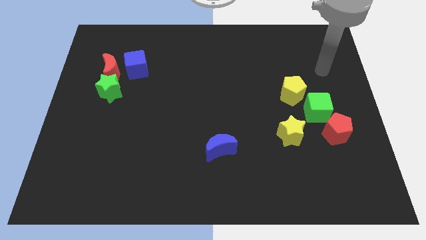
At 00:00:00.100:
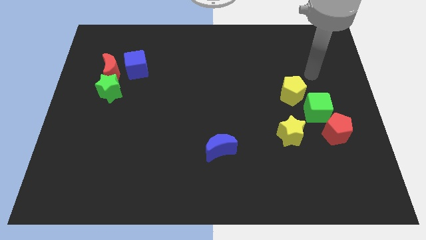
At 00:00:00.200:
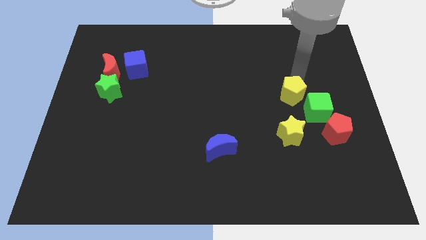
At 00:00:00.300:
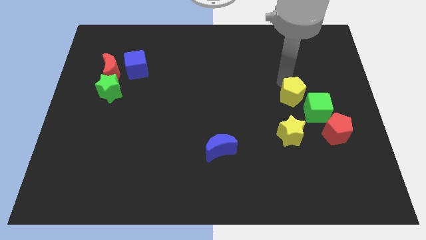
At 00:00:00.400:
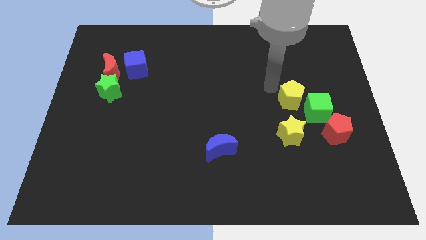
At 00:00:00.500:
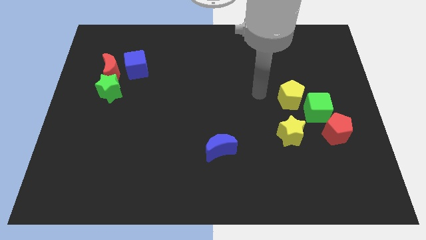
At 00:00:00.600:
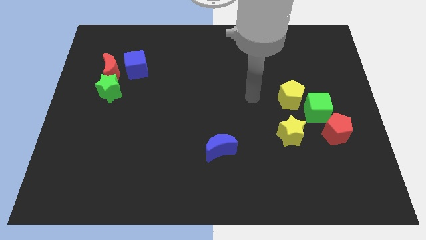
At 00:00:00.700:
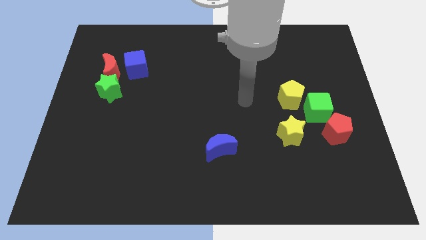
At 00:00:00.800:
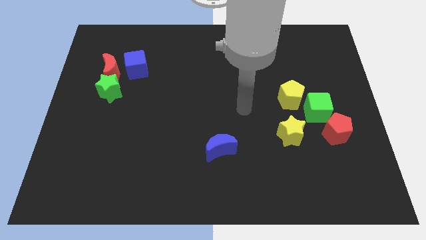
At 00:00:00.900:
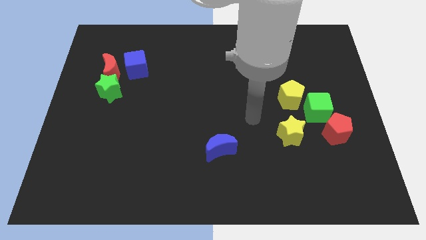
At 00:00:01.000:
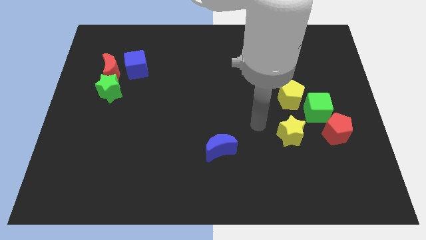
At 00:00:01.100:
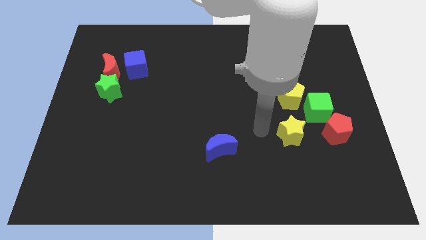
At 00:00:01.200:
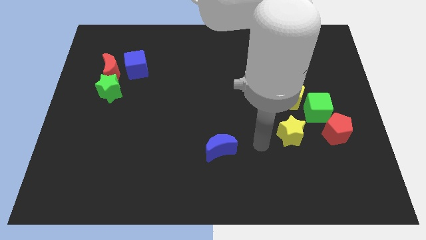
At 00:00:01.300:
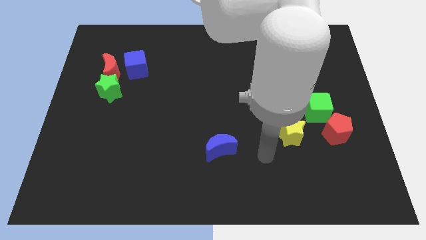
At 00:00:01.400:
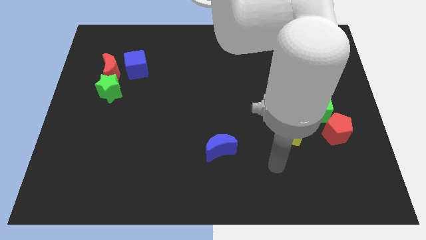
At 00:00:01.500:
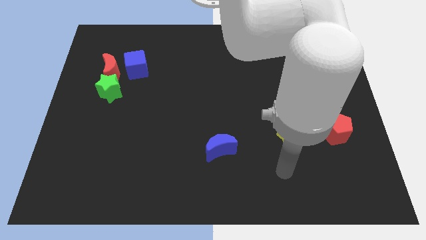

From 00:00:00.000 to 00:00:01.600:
point your arm below the yellow star

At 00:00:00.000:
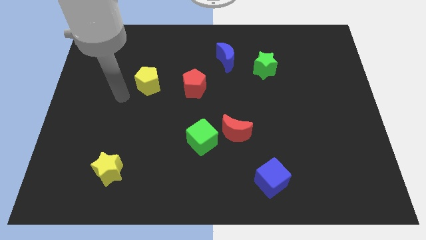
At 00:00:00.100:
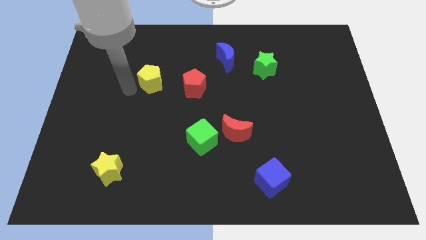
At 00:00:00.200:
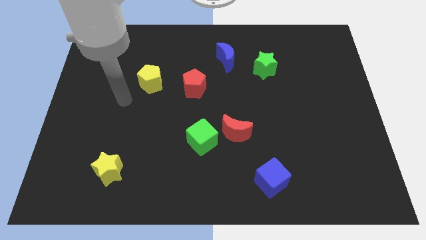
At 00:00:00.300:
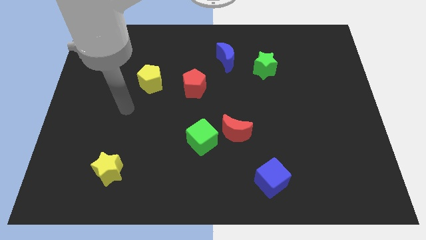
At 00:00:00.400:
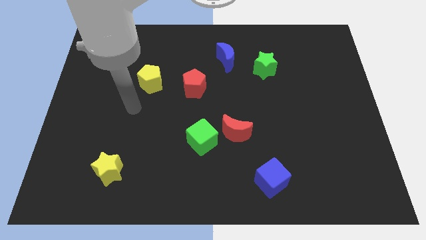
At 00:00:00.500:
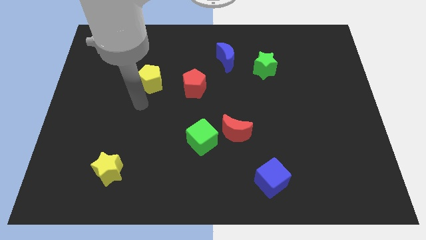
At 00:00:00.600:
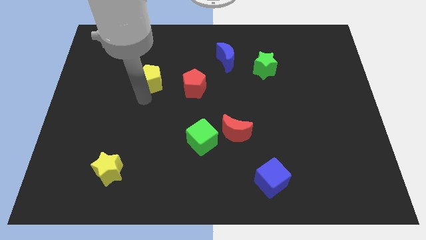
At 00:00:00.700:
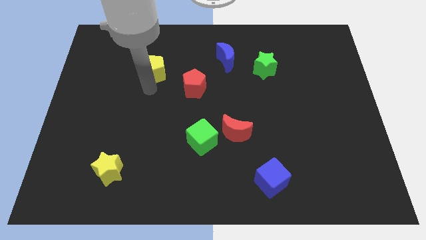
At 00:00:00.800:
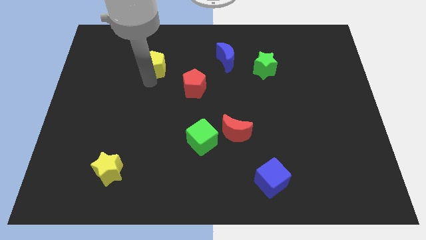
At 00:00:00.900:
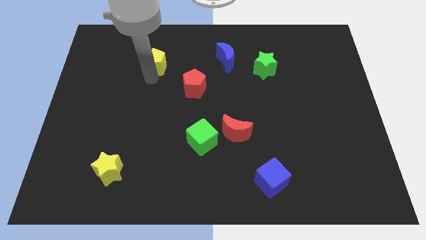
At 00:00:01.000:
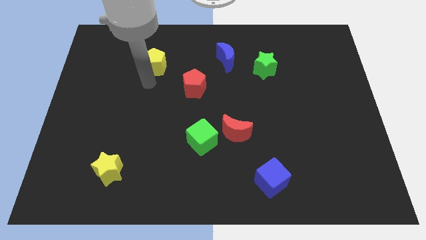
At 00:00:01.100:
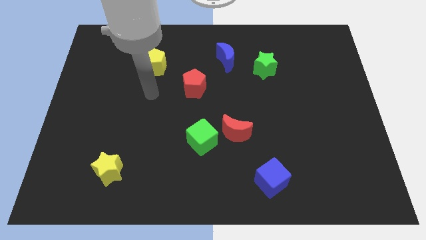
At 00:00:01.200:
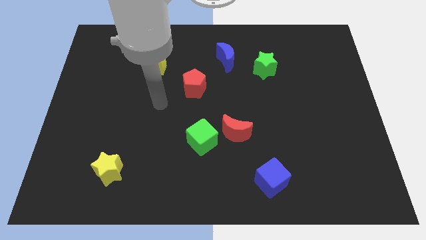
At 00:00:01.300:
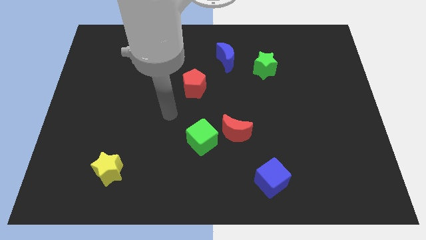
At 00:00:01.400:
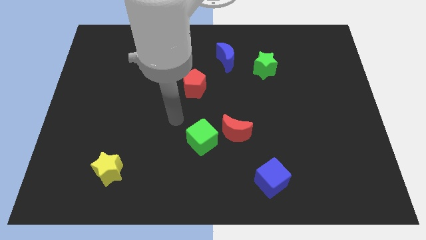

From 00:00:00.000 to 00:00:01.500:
push the yellow pentagon to the top of the board

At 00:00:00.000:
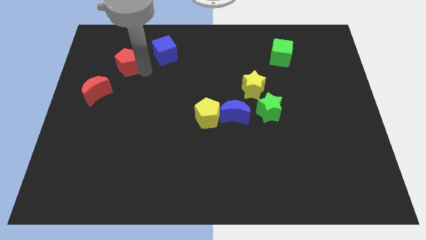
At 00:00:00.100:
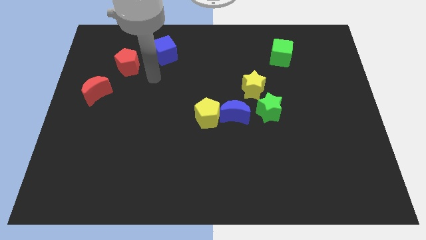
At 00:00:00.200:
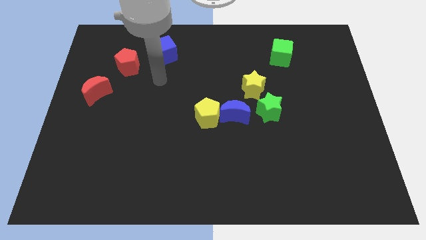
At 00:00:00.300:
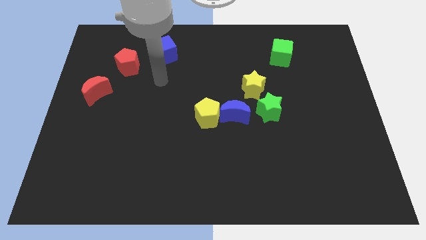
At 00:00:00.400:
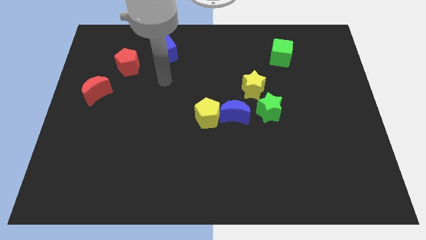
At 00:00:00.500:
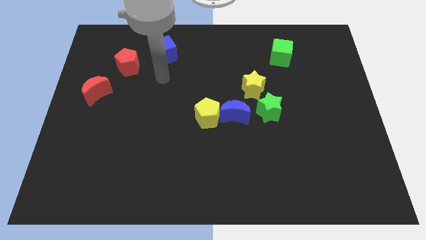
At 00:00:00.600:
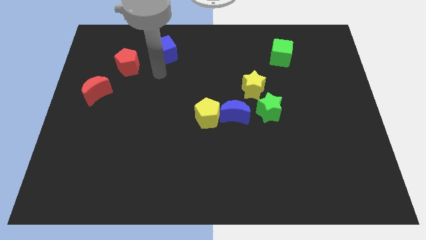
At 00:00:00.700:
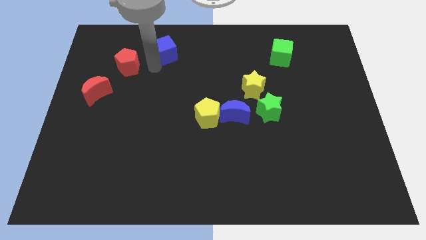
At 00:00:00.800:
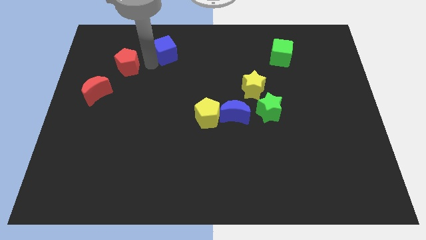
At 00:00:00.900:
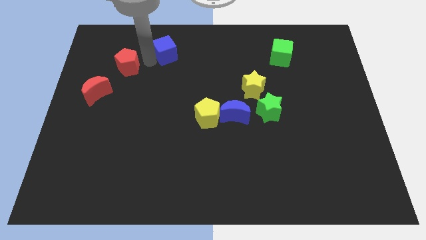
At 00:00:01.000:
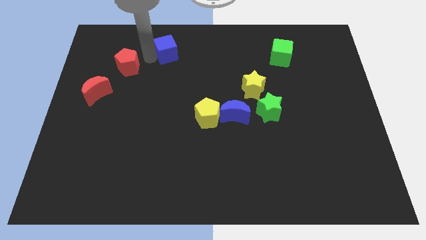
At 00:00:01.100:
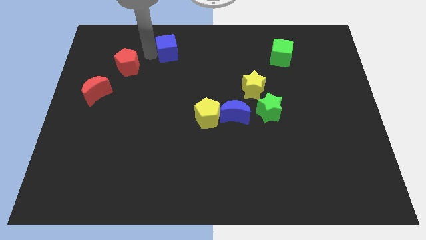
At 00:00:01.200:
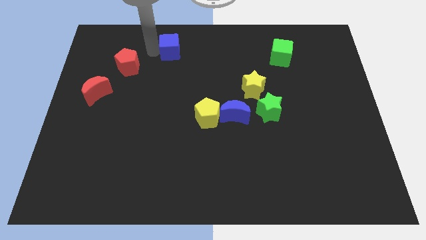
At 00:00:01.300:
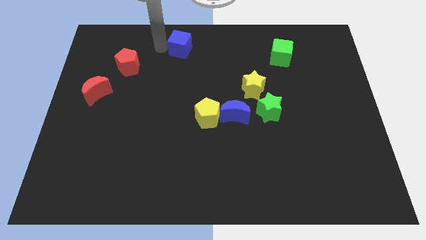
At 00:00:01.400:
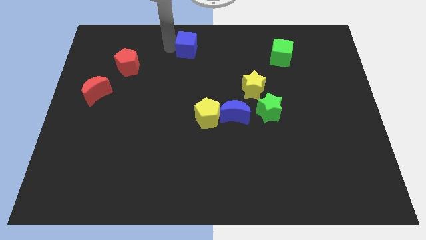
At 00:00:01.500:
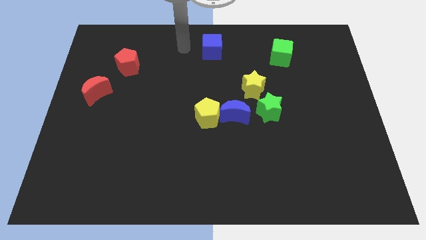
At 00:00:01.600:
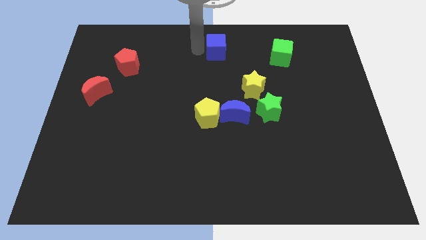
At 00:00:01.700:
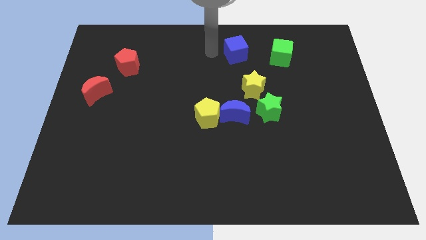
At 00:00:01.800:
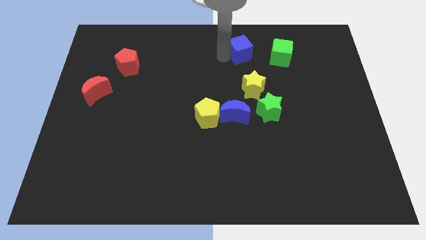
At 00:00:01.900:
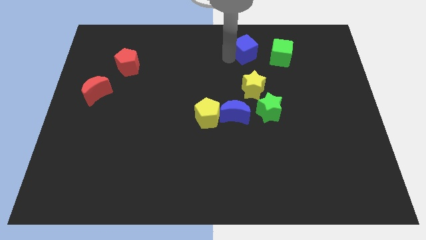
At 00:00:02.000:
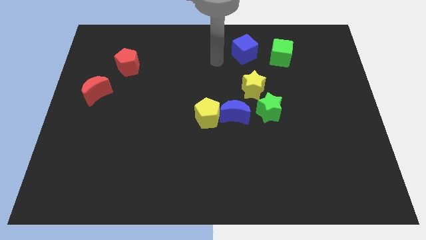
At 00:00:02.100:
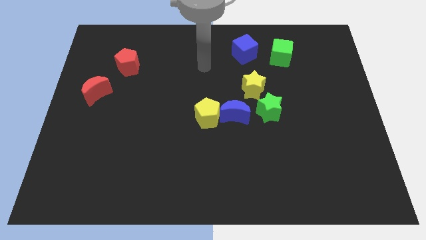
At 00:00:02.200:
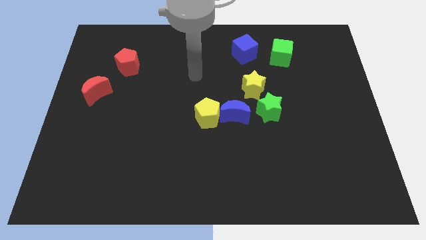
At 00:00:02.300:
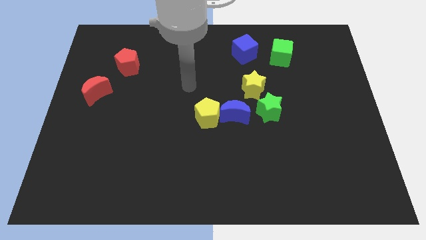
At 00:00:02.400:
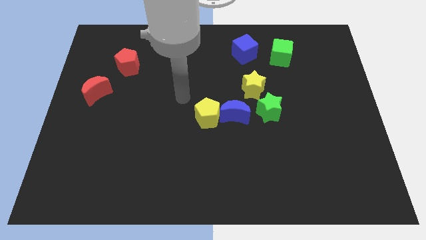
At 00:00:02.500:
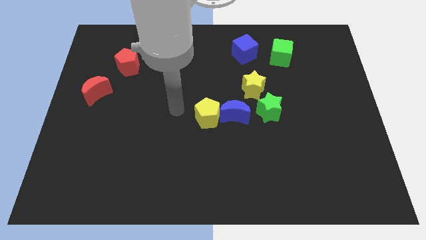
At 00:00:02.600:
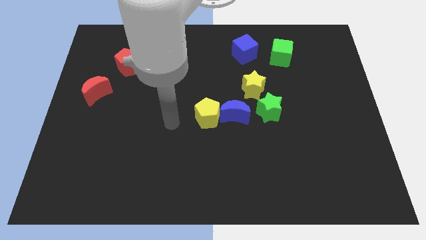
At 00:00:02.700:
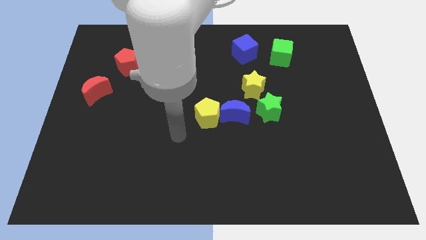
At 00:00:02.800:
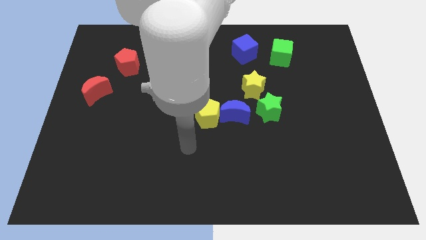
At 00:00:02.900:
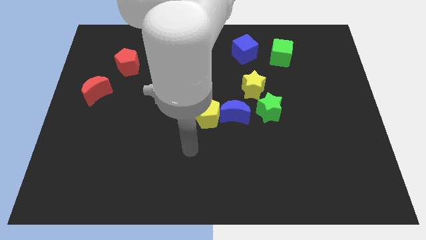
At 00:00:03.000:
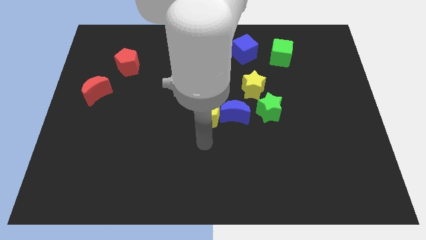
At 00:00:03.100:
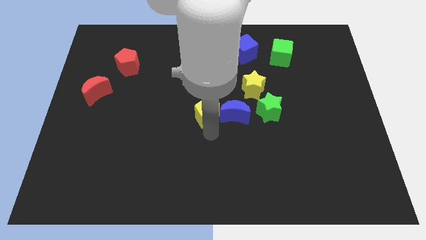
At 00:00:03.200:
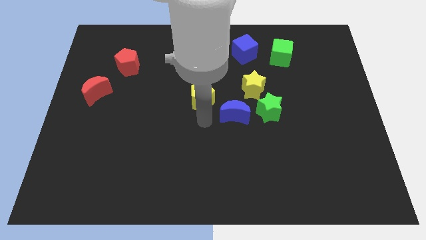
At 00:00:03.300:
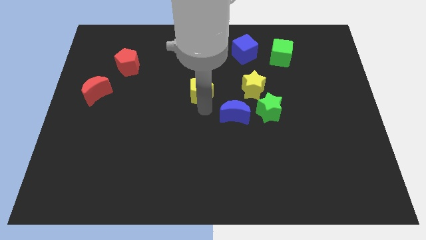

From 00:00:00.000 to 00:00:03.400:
push the blue cube close to the green cube

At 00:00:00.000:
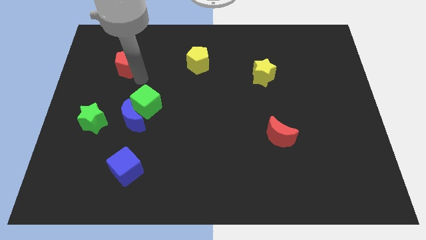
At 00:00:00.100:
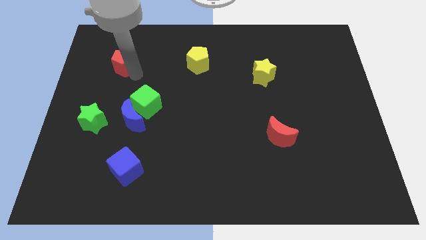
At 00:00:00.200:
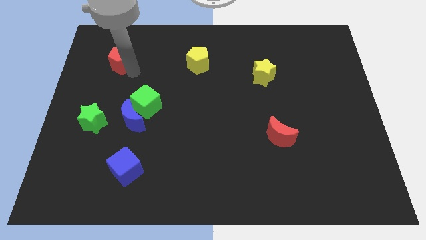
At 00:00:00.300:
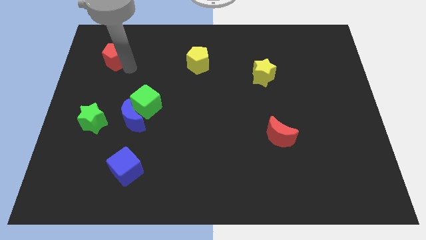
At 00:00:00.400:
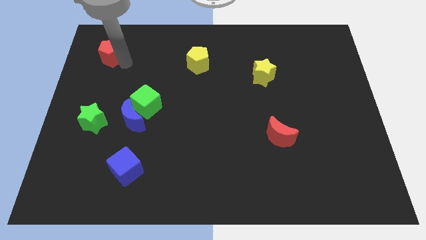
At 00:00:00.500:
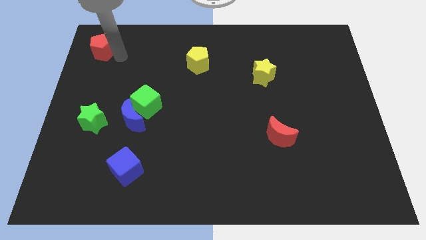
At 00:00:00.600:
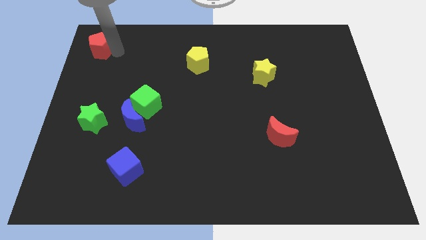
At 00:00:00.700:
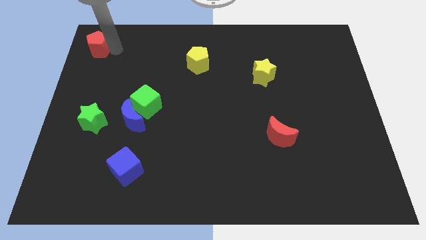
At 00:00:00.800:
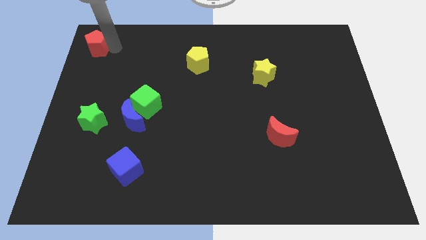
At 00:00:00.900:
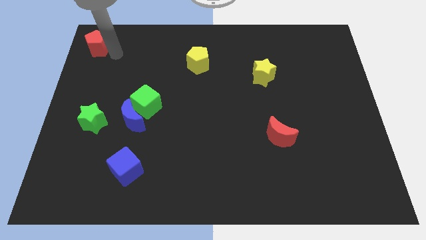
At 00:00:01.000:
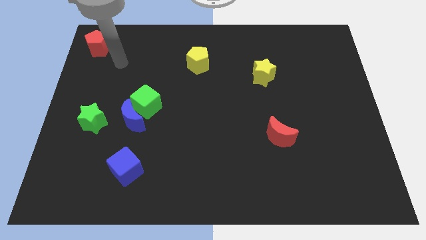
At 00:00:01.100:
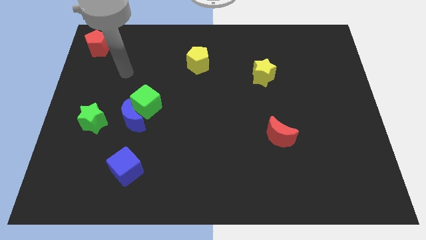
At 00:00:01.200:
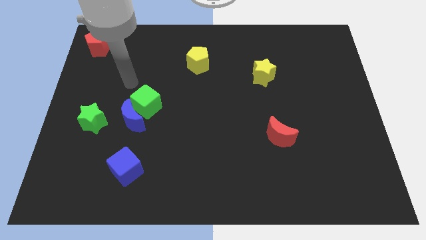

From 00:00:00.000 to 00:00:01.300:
put the red pentagon at the top left corner of the board

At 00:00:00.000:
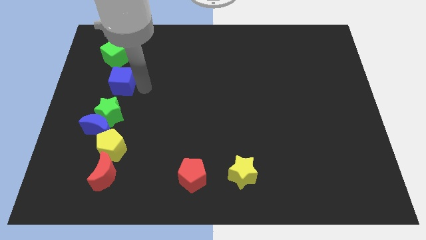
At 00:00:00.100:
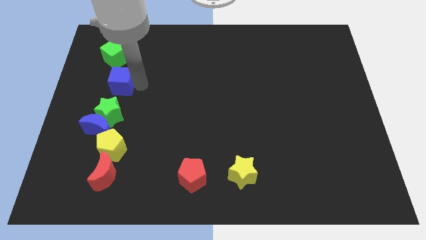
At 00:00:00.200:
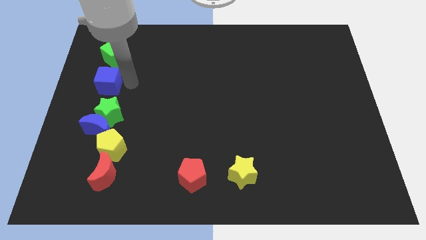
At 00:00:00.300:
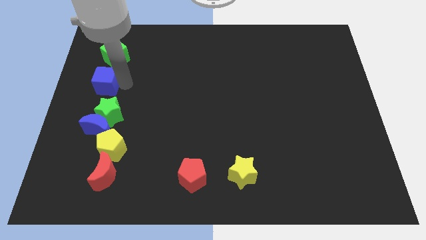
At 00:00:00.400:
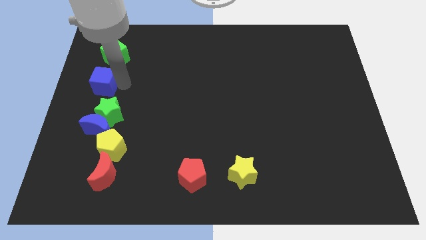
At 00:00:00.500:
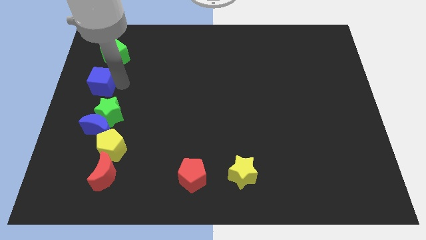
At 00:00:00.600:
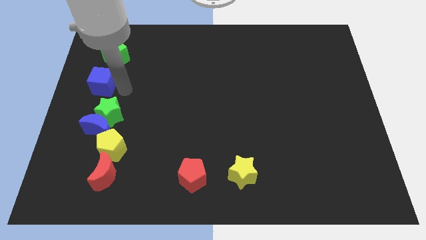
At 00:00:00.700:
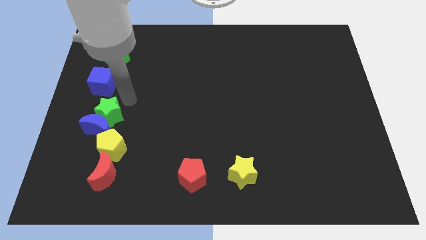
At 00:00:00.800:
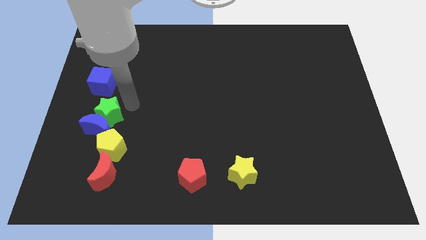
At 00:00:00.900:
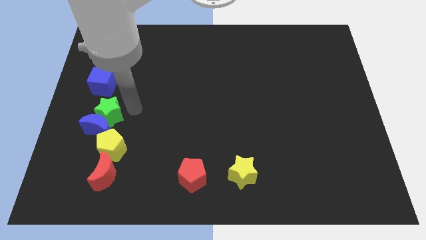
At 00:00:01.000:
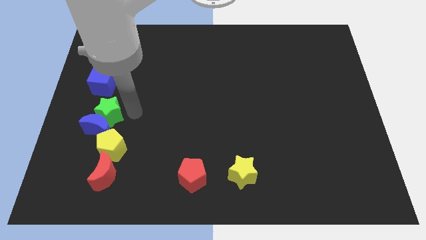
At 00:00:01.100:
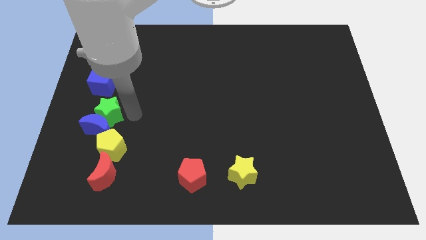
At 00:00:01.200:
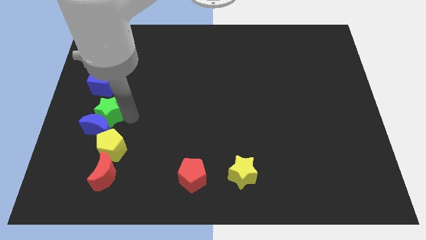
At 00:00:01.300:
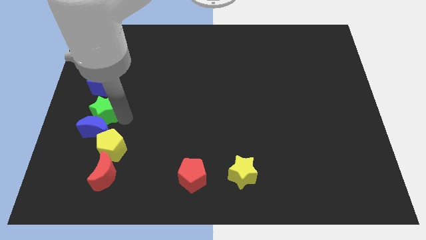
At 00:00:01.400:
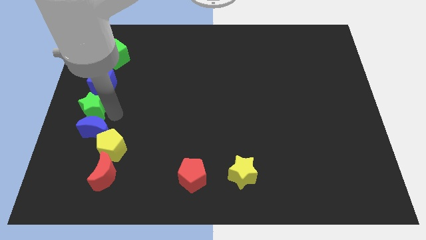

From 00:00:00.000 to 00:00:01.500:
slide the blue cube to the top of the green star
